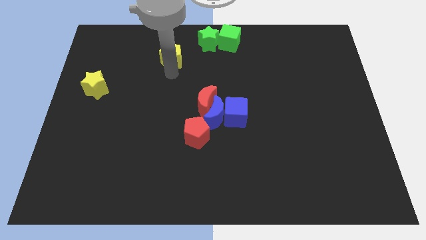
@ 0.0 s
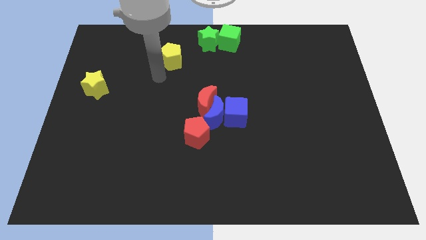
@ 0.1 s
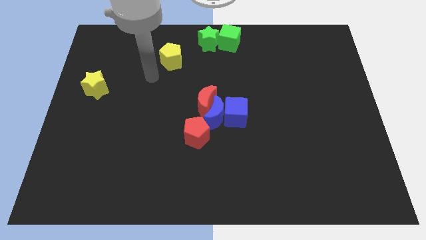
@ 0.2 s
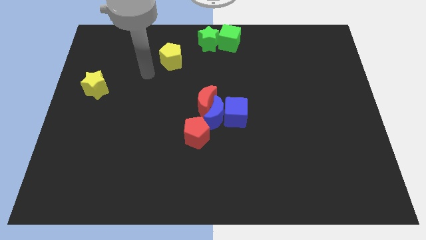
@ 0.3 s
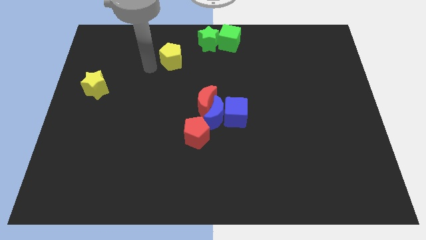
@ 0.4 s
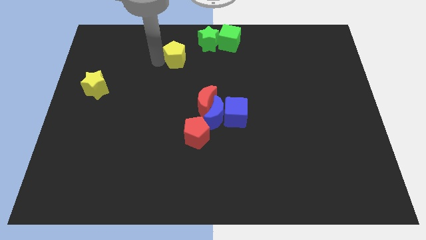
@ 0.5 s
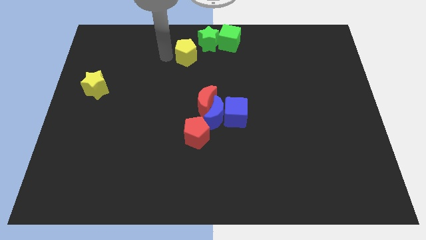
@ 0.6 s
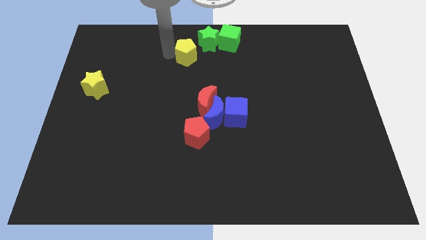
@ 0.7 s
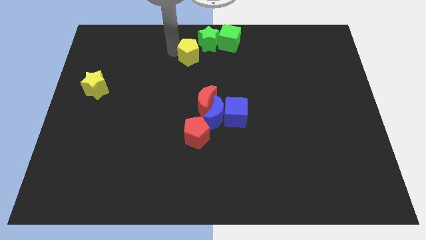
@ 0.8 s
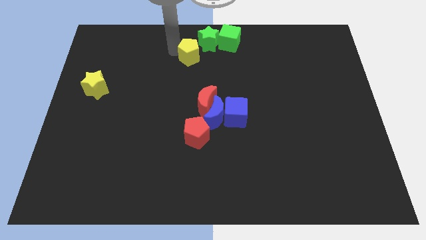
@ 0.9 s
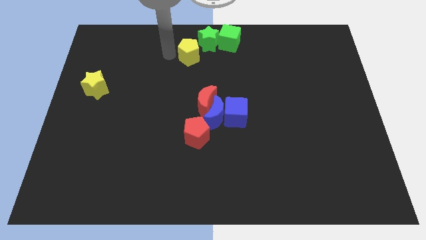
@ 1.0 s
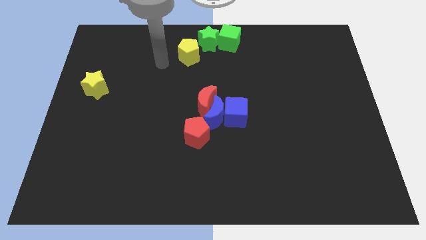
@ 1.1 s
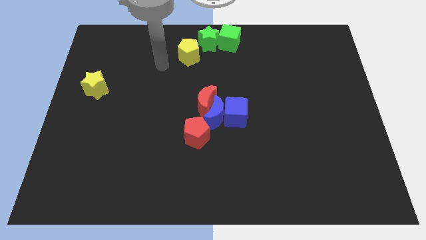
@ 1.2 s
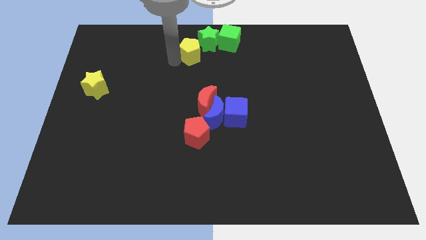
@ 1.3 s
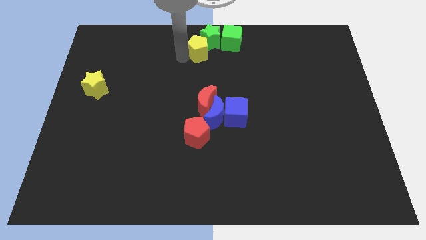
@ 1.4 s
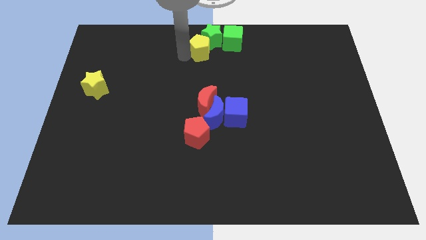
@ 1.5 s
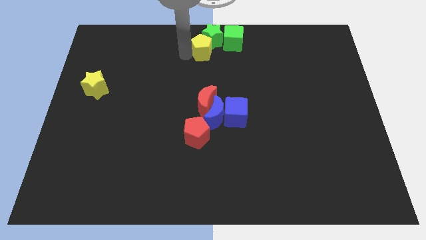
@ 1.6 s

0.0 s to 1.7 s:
move the yellow pentagon into the green star

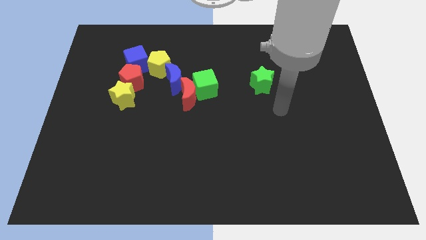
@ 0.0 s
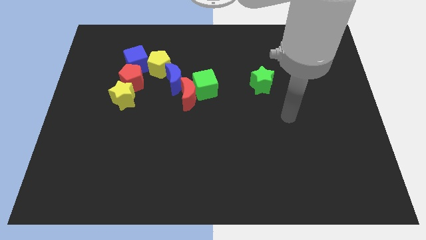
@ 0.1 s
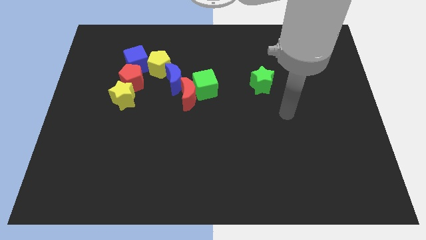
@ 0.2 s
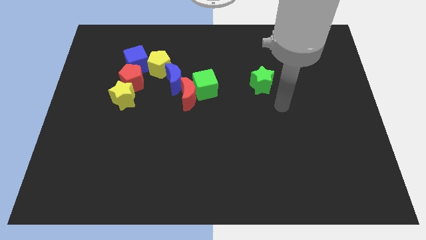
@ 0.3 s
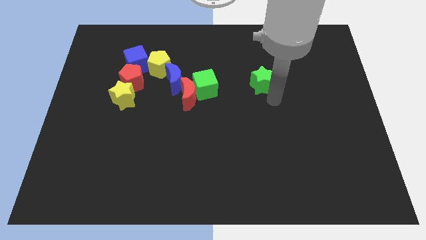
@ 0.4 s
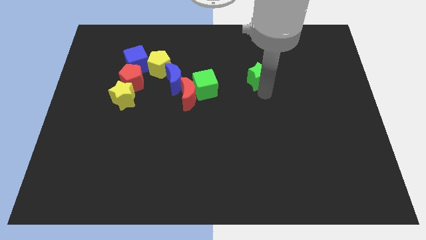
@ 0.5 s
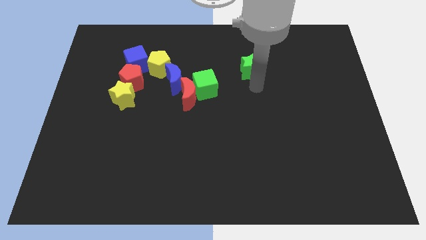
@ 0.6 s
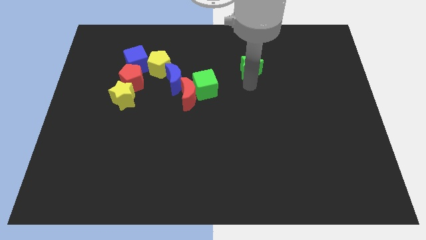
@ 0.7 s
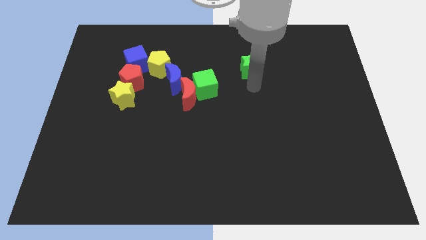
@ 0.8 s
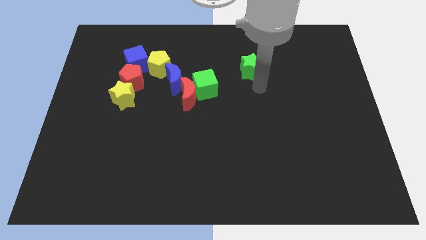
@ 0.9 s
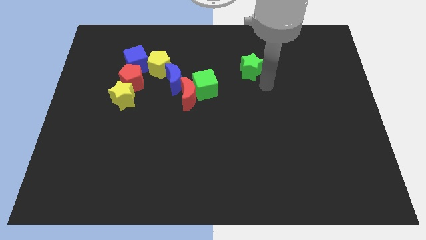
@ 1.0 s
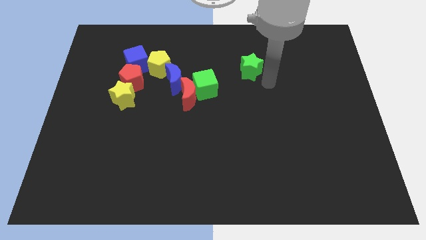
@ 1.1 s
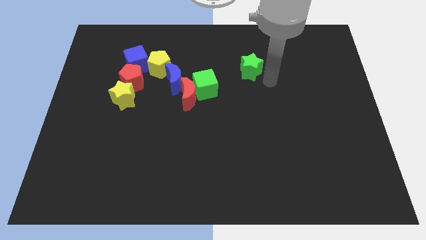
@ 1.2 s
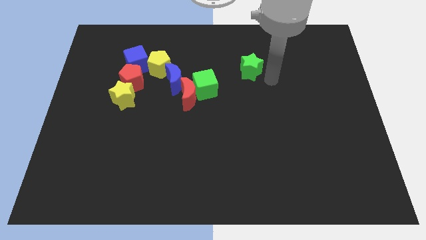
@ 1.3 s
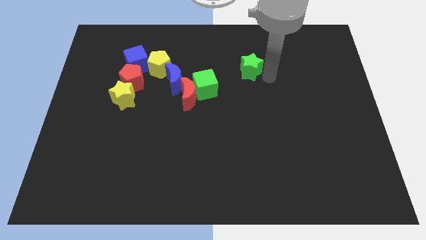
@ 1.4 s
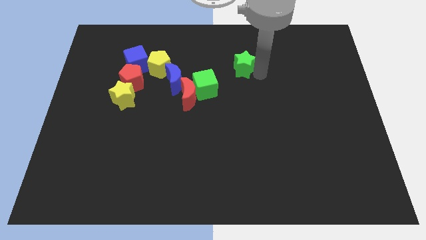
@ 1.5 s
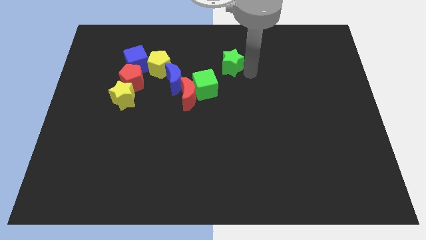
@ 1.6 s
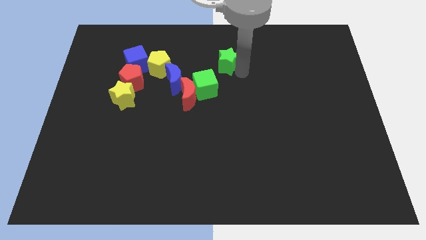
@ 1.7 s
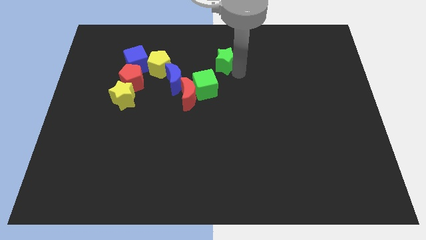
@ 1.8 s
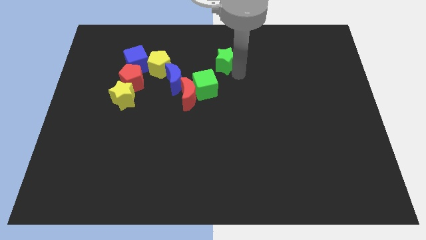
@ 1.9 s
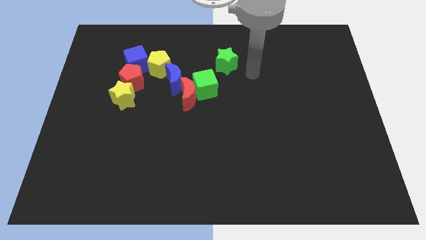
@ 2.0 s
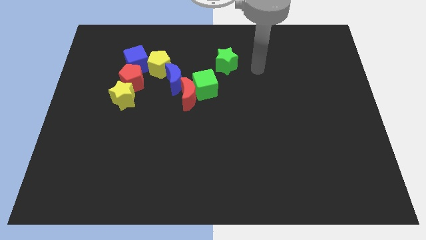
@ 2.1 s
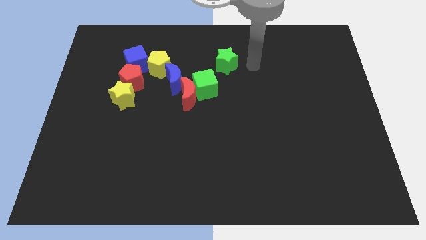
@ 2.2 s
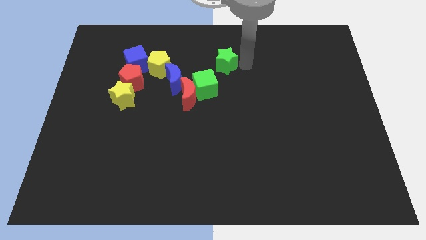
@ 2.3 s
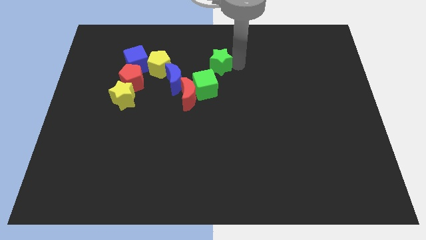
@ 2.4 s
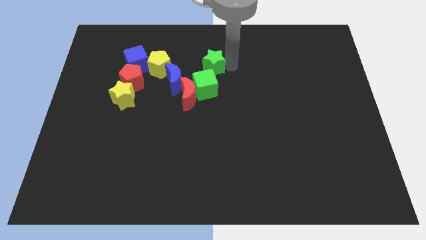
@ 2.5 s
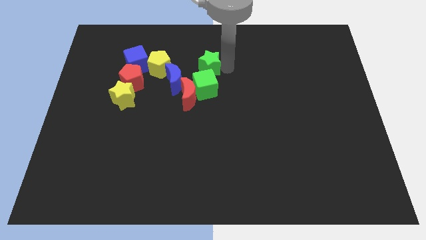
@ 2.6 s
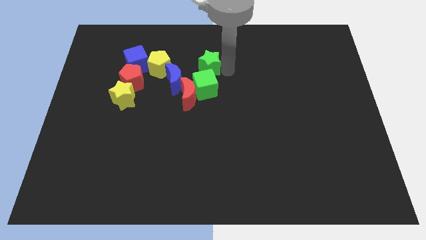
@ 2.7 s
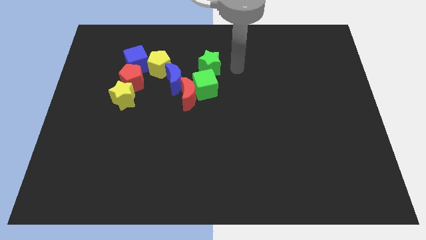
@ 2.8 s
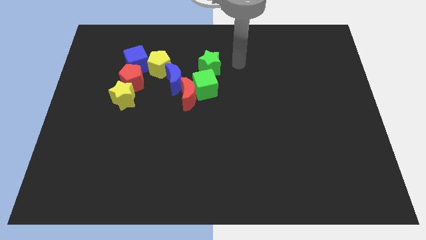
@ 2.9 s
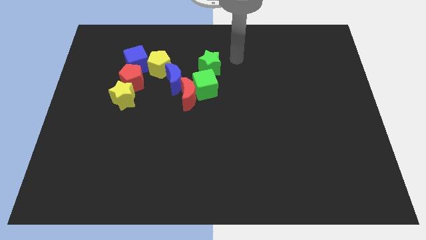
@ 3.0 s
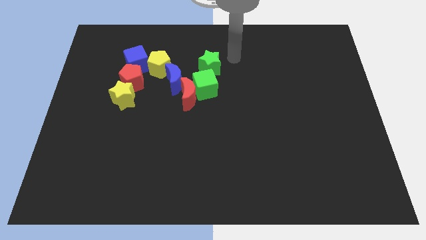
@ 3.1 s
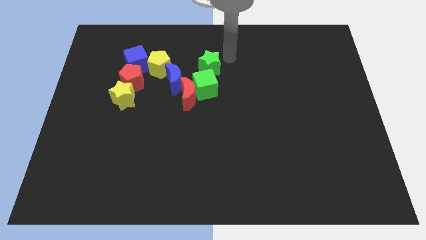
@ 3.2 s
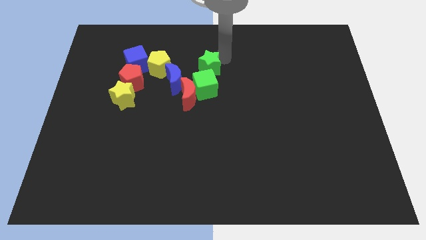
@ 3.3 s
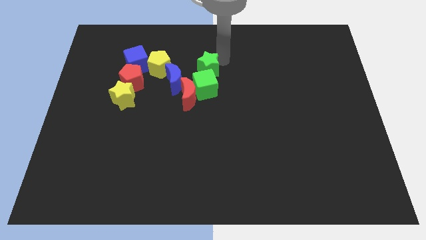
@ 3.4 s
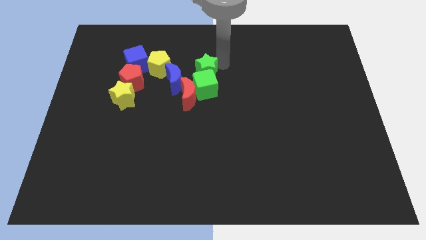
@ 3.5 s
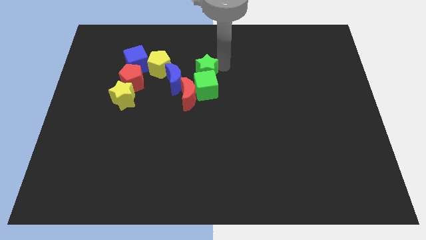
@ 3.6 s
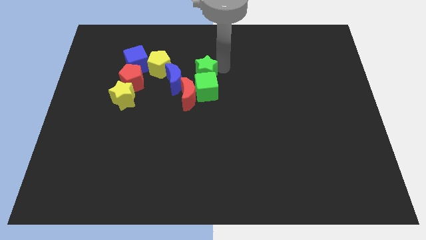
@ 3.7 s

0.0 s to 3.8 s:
place the green star above the green cube

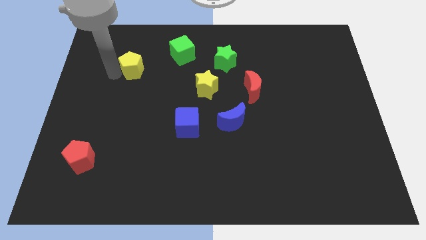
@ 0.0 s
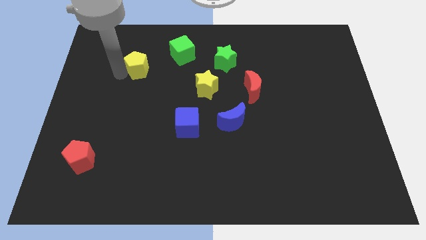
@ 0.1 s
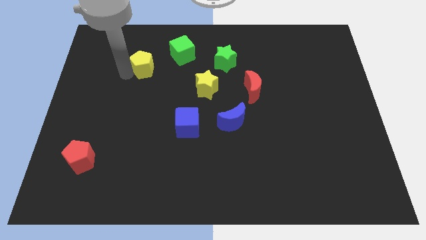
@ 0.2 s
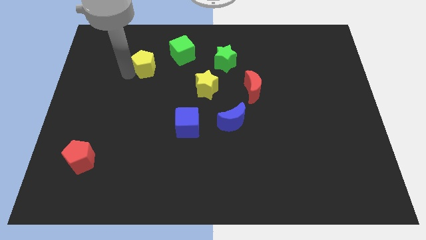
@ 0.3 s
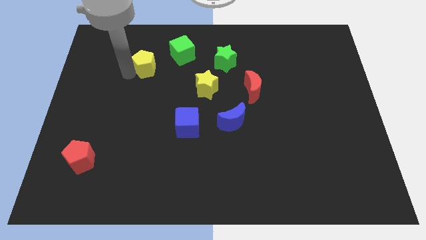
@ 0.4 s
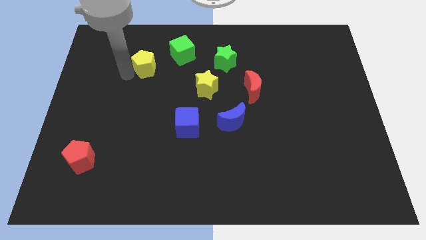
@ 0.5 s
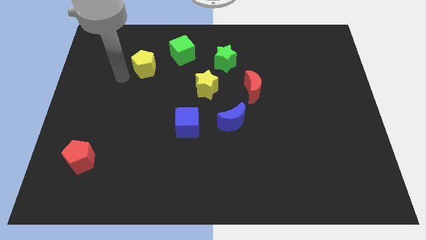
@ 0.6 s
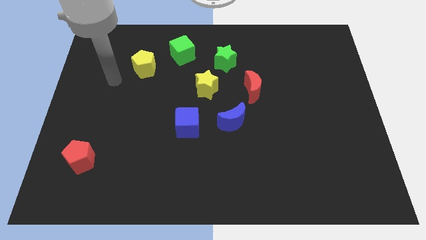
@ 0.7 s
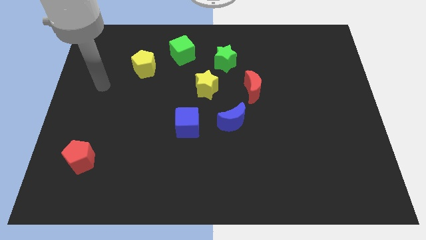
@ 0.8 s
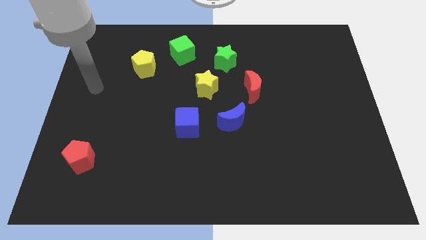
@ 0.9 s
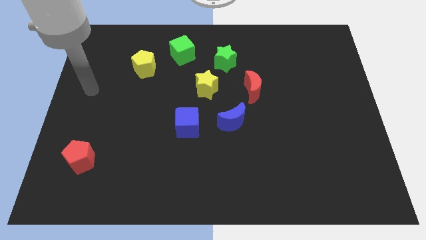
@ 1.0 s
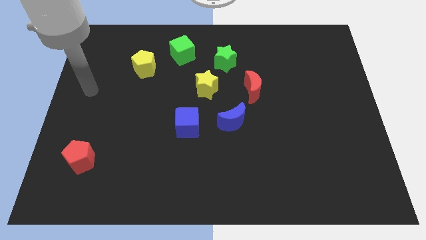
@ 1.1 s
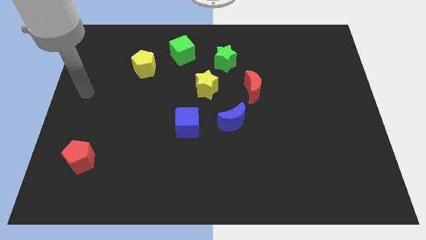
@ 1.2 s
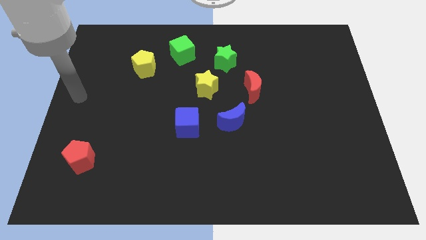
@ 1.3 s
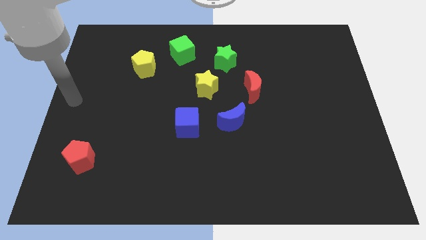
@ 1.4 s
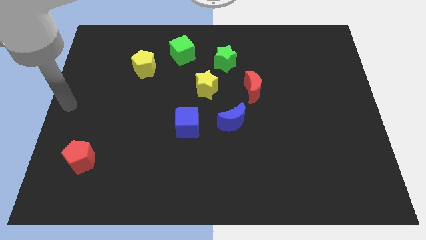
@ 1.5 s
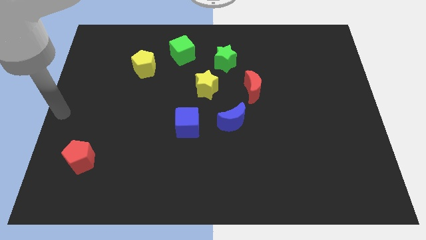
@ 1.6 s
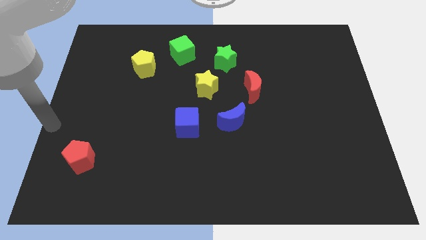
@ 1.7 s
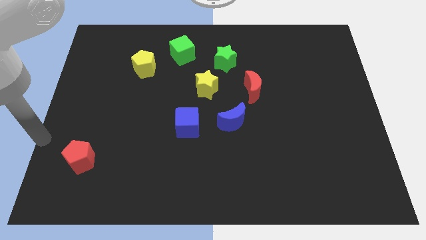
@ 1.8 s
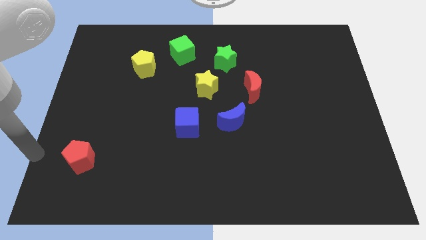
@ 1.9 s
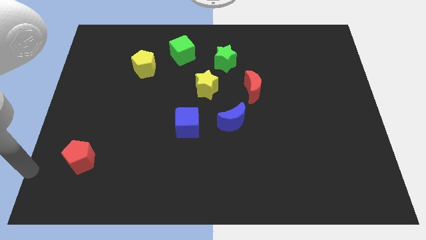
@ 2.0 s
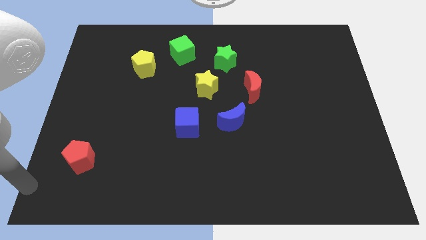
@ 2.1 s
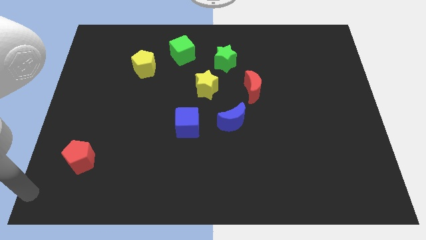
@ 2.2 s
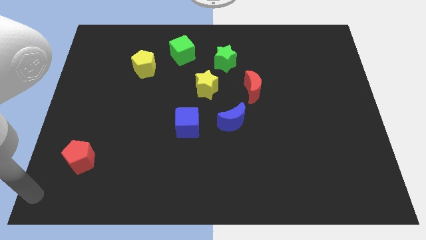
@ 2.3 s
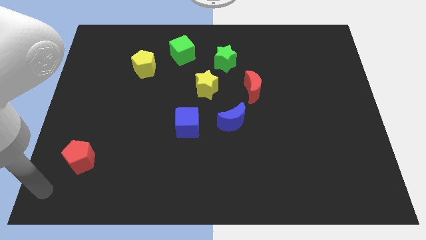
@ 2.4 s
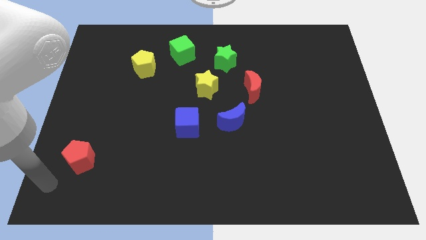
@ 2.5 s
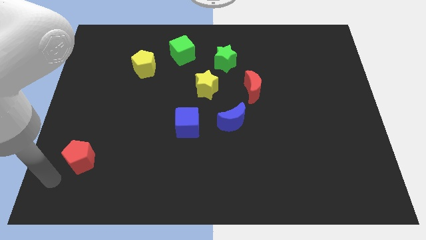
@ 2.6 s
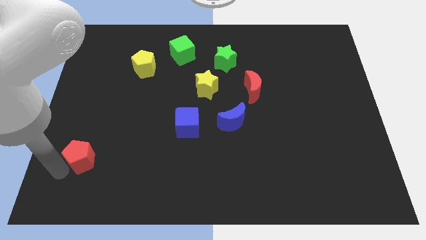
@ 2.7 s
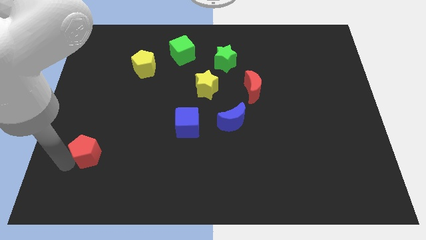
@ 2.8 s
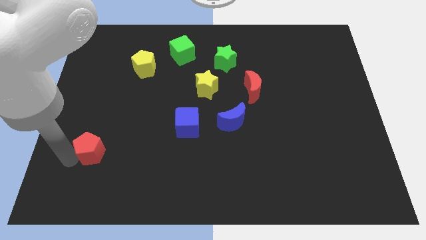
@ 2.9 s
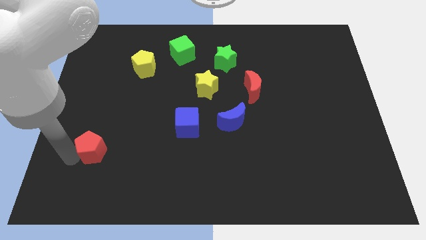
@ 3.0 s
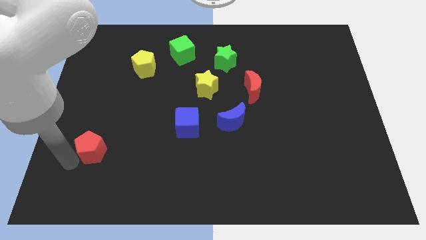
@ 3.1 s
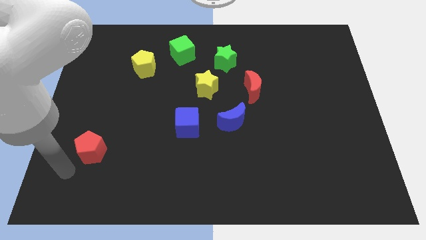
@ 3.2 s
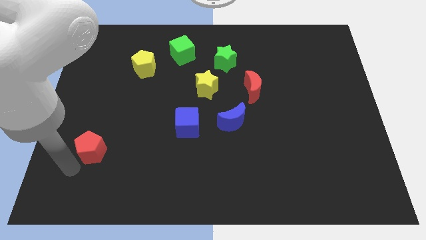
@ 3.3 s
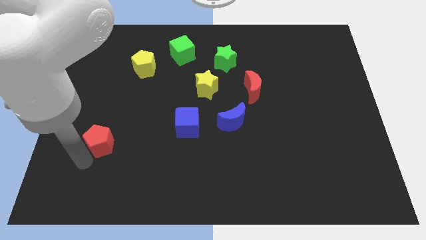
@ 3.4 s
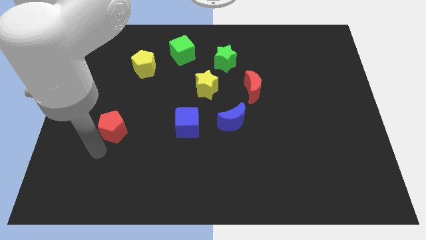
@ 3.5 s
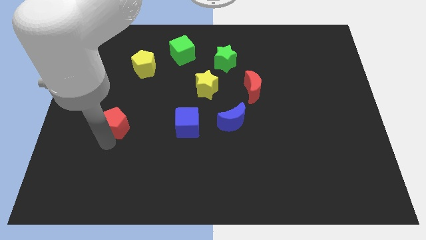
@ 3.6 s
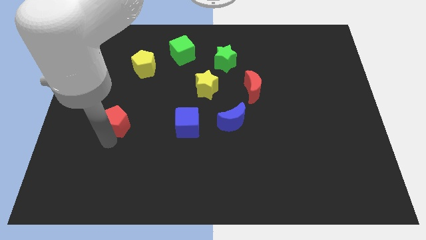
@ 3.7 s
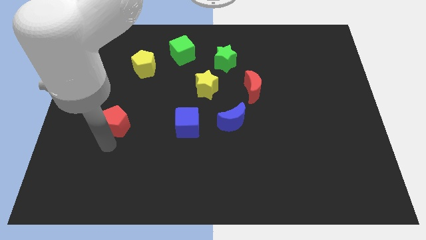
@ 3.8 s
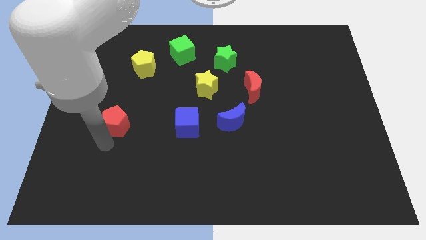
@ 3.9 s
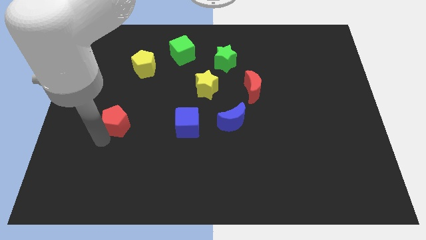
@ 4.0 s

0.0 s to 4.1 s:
place the red pentagon parallel to the blue cube
